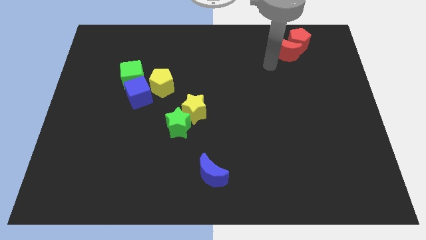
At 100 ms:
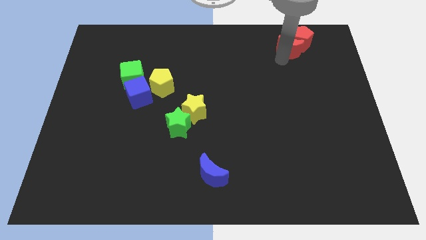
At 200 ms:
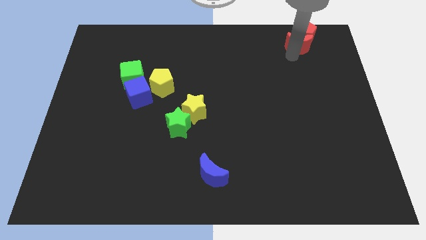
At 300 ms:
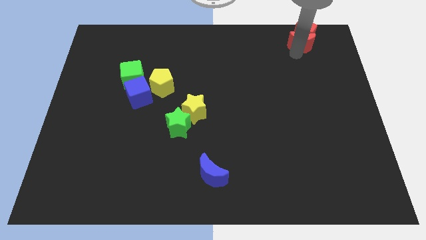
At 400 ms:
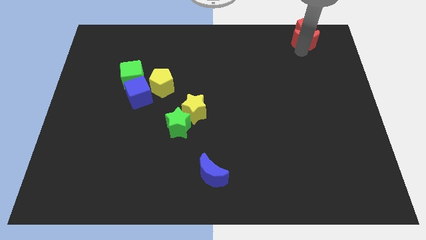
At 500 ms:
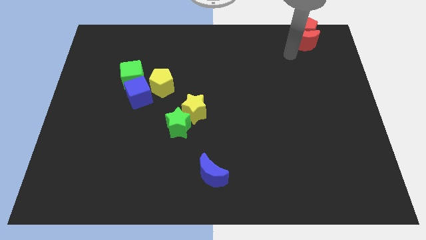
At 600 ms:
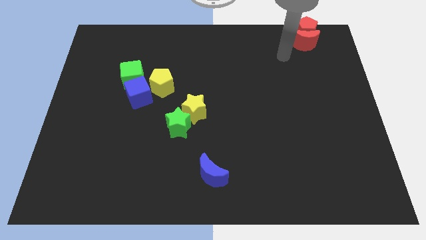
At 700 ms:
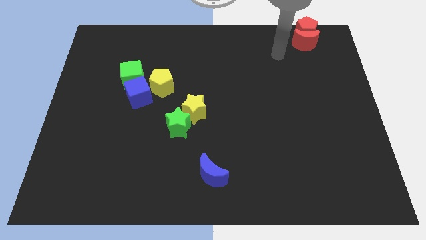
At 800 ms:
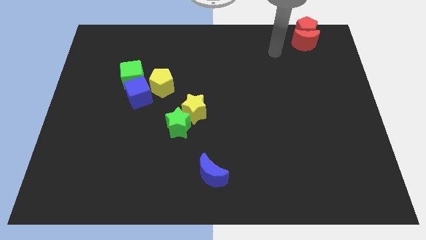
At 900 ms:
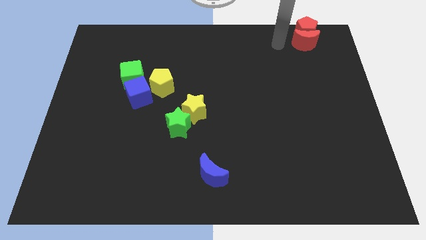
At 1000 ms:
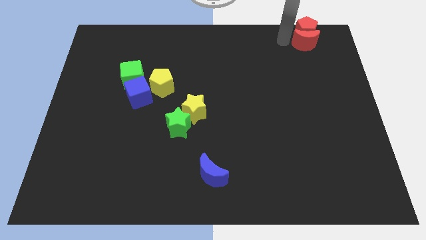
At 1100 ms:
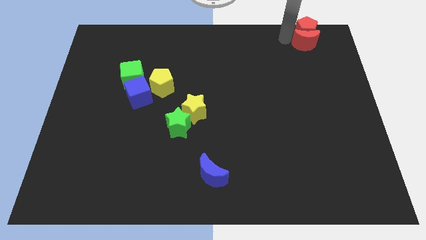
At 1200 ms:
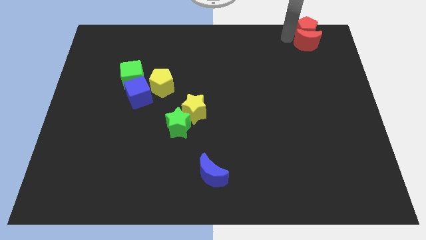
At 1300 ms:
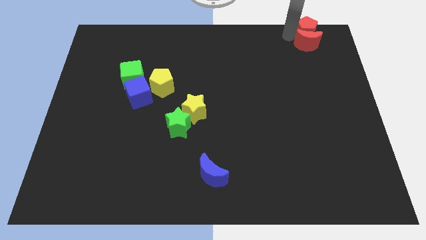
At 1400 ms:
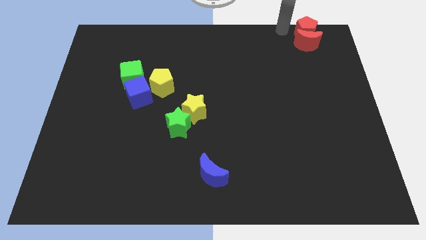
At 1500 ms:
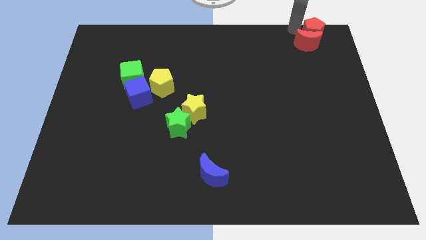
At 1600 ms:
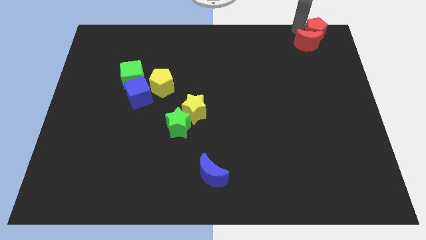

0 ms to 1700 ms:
push the red blocks towards the top right corner of the board

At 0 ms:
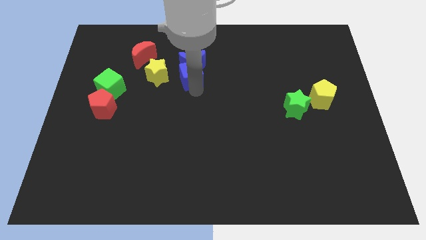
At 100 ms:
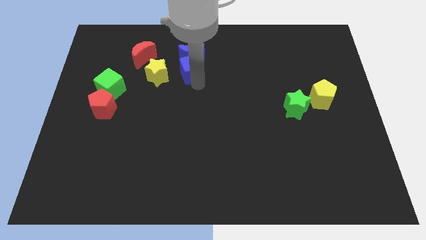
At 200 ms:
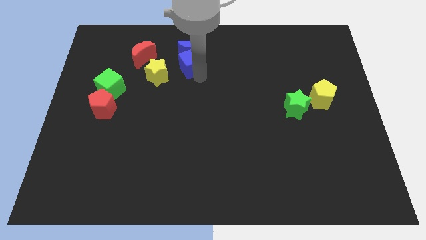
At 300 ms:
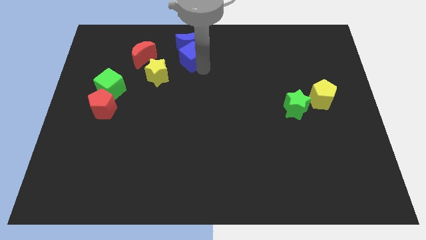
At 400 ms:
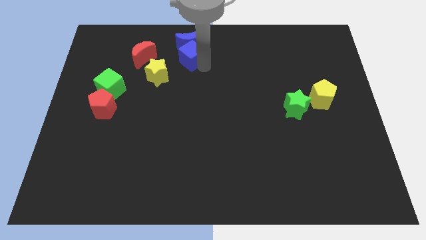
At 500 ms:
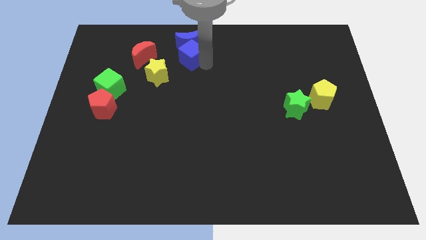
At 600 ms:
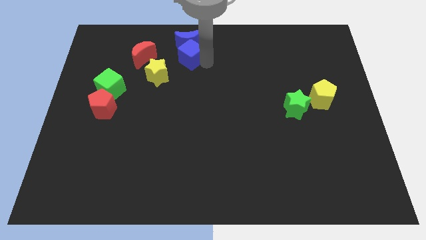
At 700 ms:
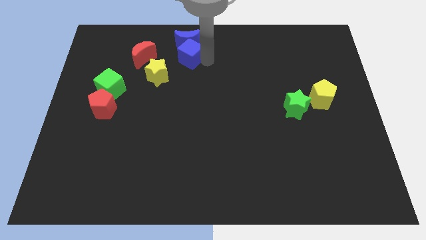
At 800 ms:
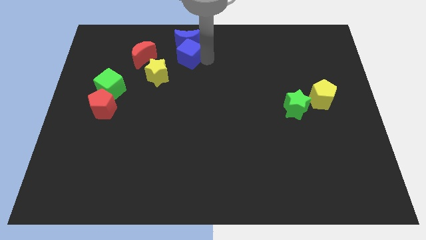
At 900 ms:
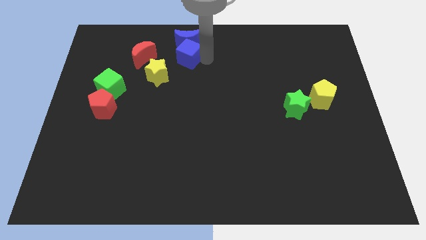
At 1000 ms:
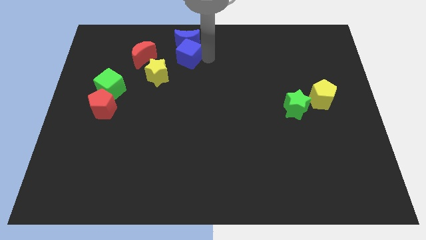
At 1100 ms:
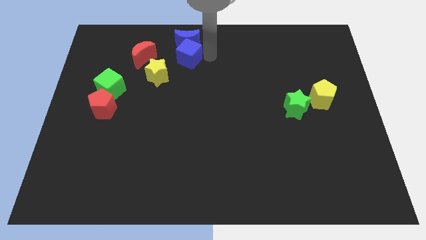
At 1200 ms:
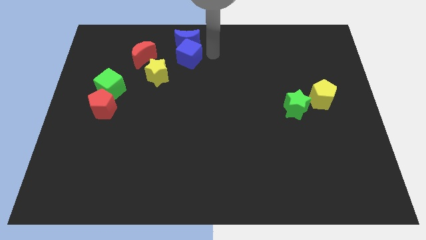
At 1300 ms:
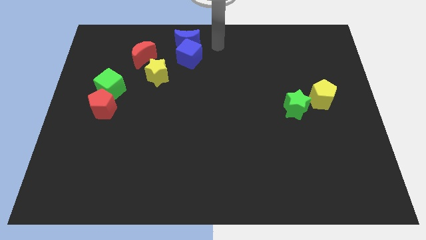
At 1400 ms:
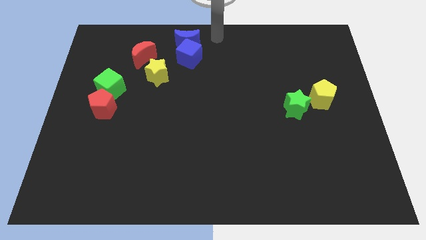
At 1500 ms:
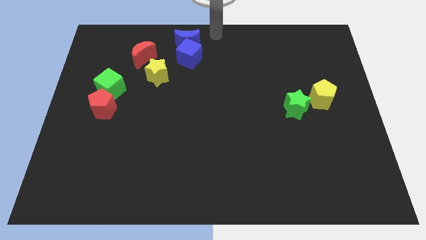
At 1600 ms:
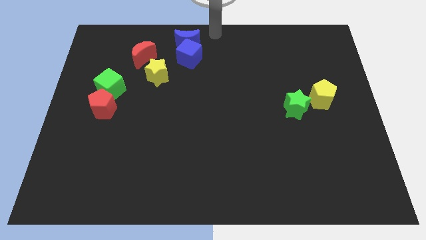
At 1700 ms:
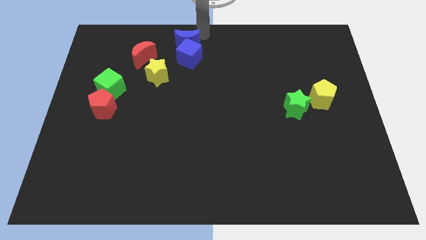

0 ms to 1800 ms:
move the arm away from the blue blocks

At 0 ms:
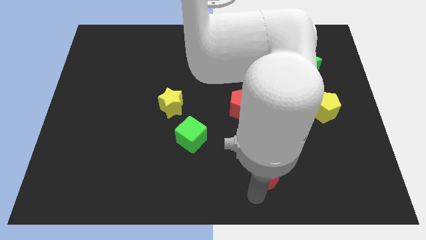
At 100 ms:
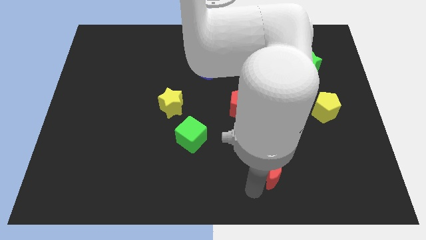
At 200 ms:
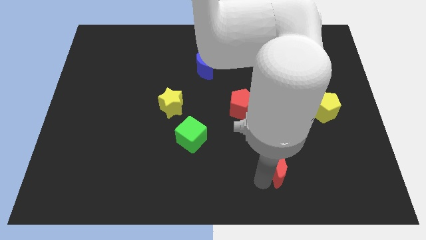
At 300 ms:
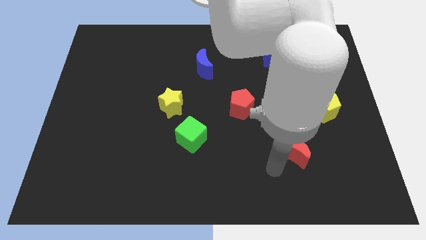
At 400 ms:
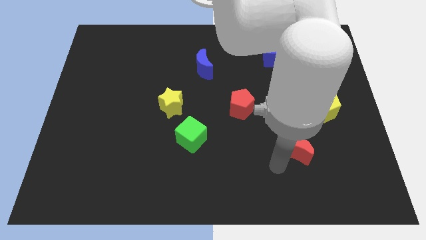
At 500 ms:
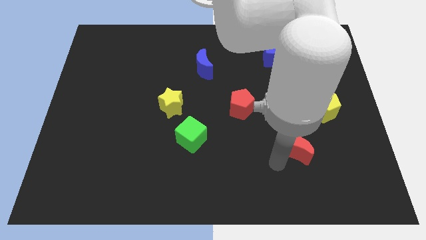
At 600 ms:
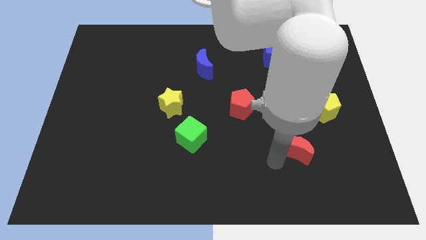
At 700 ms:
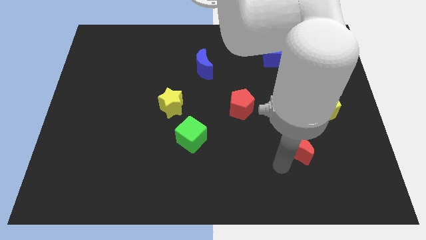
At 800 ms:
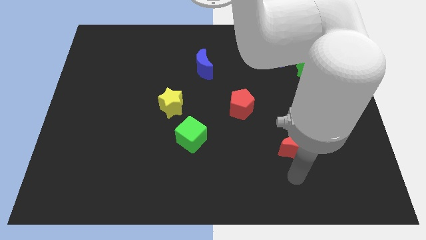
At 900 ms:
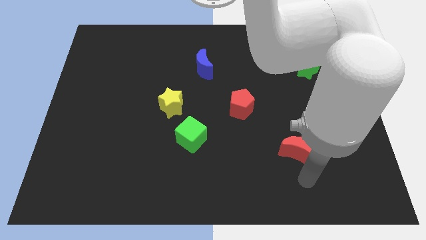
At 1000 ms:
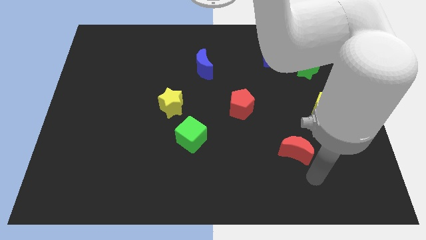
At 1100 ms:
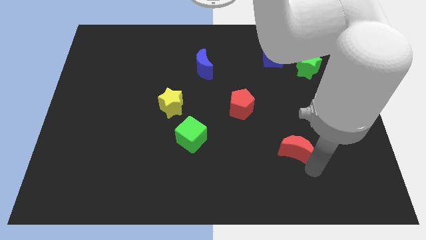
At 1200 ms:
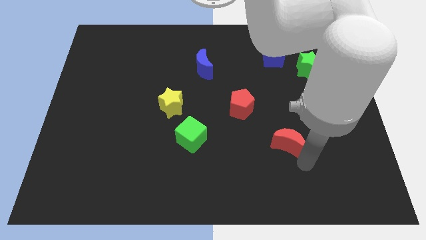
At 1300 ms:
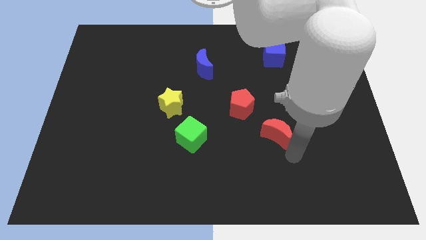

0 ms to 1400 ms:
place the red moon right to the green cube

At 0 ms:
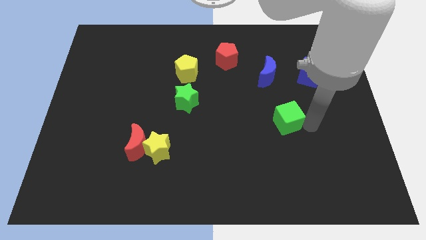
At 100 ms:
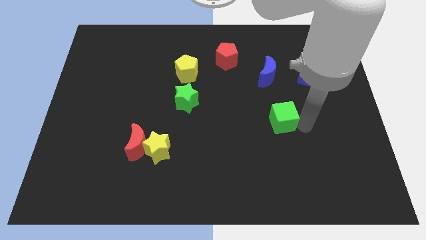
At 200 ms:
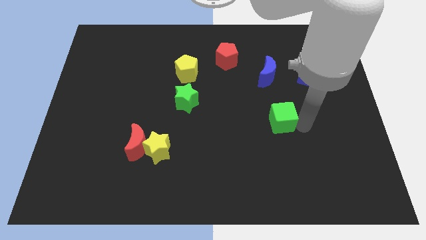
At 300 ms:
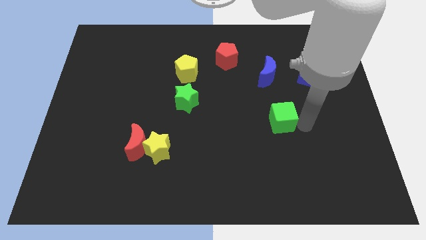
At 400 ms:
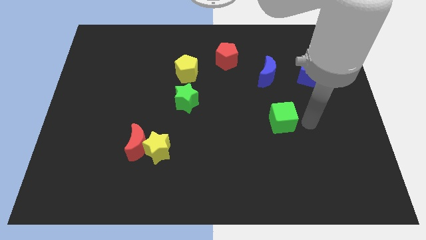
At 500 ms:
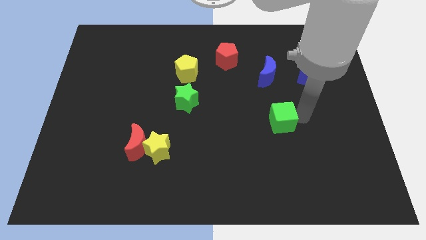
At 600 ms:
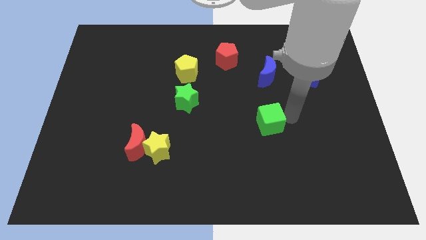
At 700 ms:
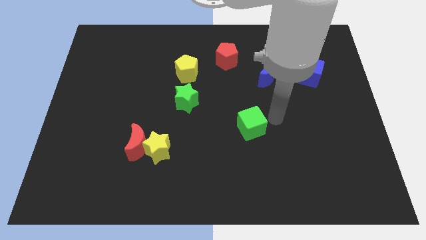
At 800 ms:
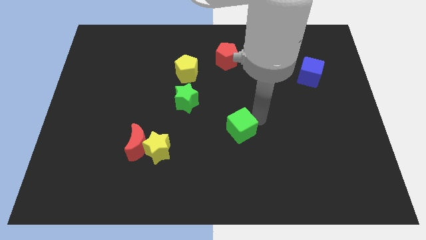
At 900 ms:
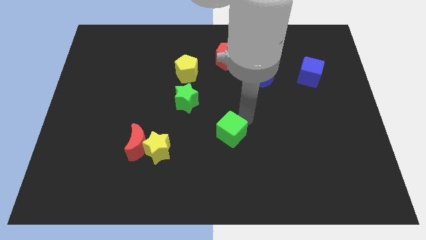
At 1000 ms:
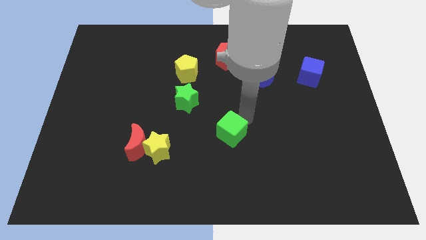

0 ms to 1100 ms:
push the green cube towards the left of the board

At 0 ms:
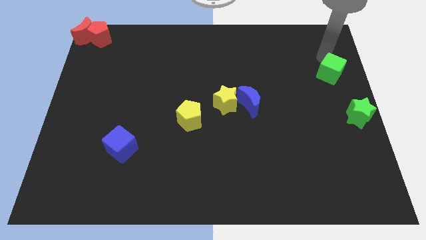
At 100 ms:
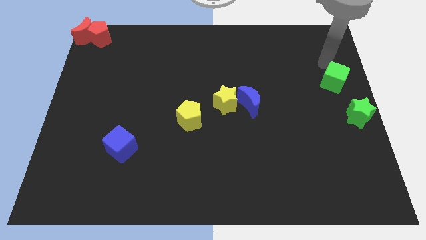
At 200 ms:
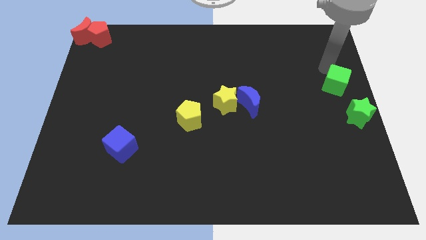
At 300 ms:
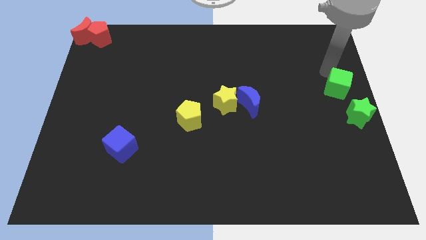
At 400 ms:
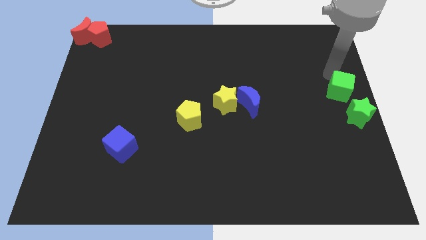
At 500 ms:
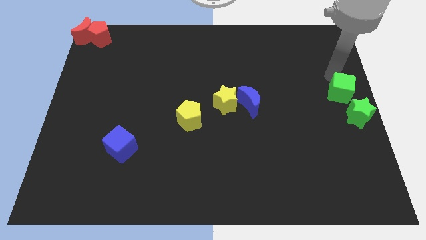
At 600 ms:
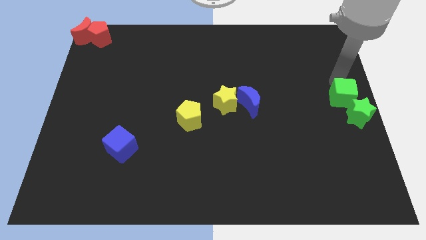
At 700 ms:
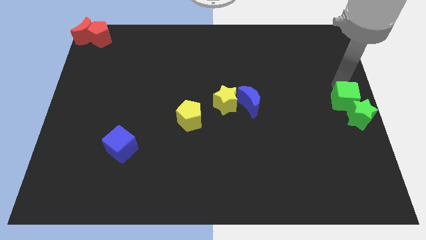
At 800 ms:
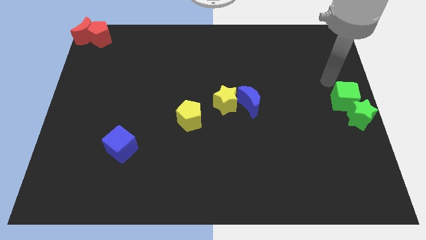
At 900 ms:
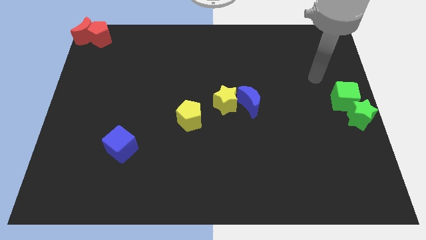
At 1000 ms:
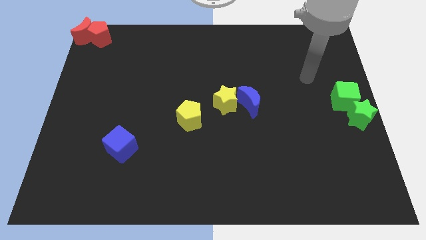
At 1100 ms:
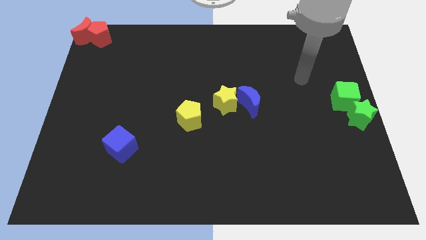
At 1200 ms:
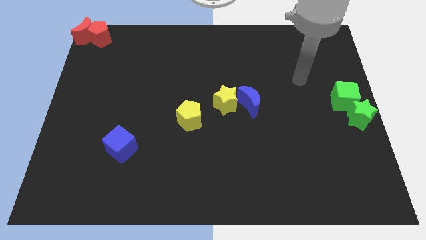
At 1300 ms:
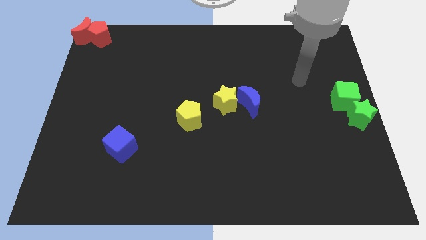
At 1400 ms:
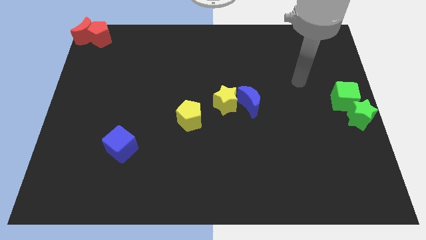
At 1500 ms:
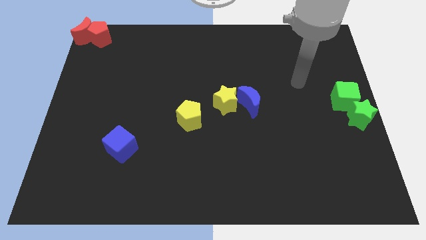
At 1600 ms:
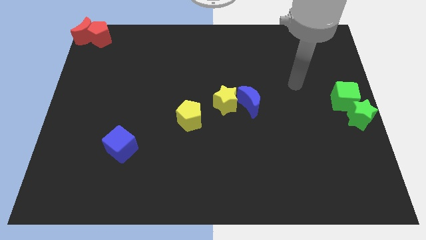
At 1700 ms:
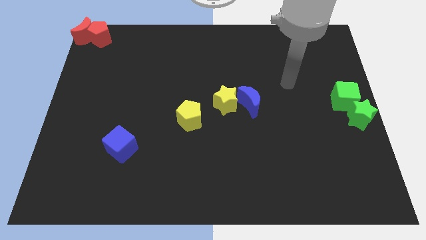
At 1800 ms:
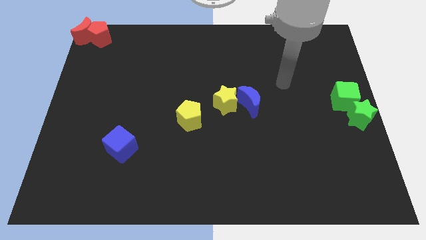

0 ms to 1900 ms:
move the green cube to the top of the green star

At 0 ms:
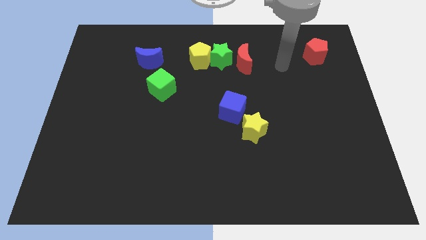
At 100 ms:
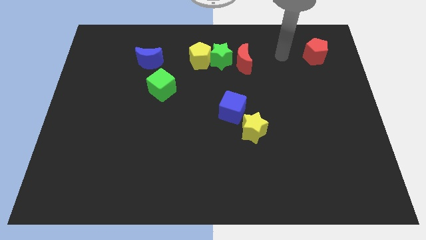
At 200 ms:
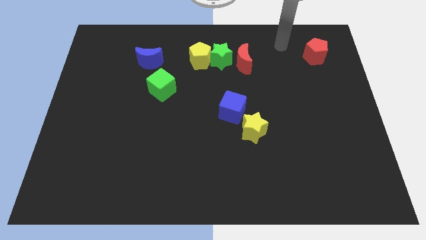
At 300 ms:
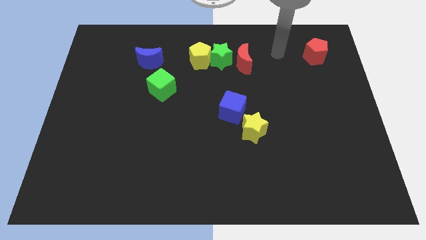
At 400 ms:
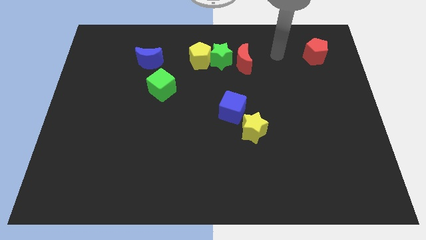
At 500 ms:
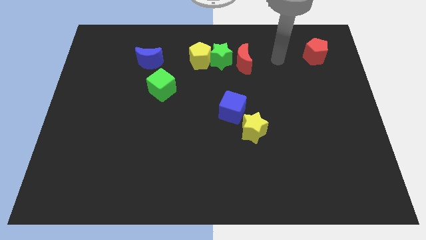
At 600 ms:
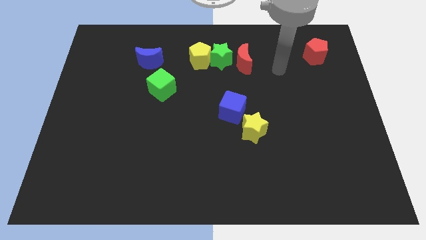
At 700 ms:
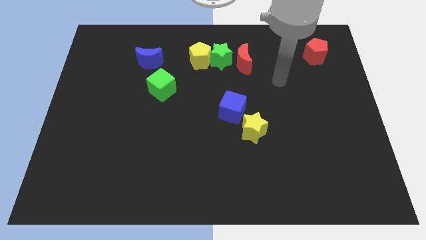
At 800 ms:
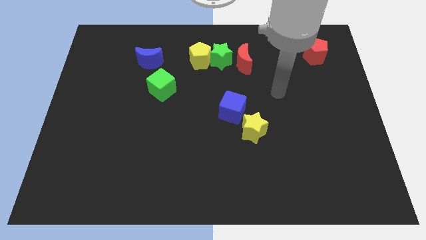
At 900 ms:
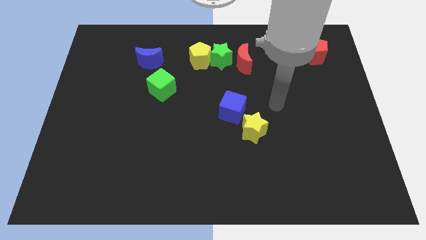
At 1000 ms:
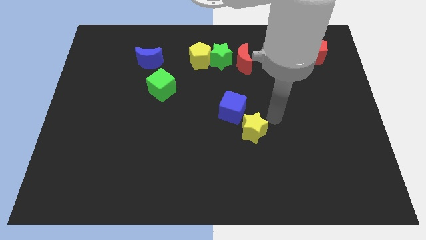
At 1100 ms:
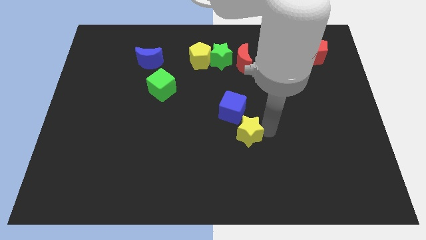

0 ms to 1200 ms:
move your arm near the yellow star
